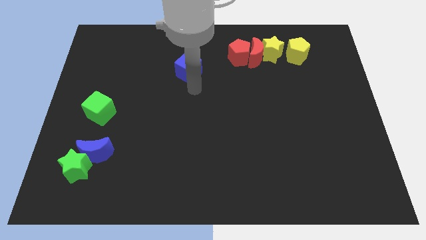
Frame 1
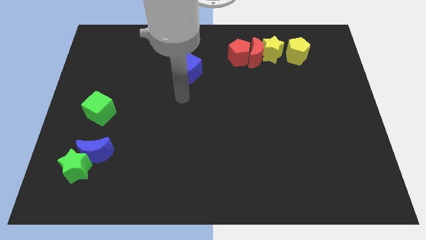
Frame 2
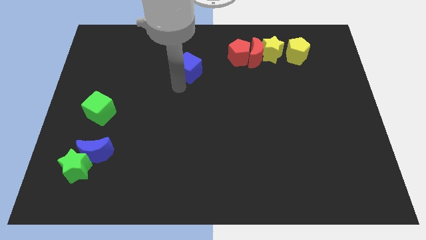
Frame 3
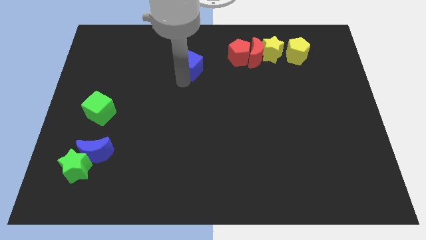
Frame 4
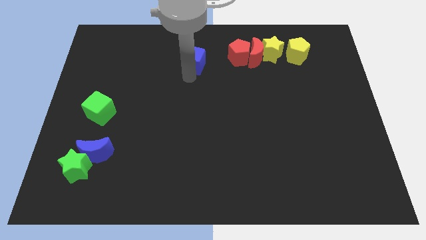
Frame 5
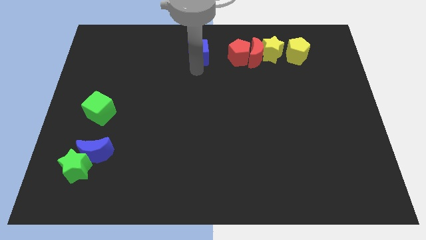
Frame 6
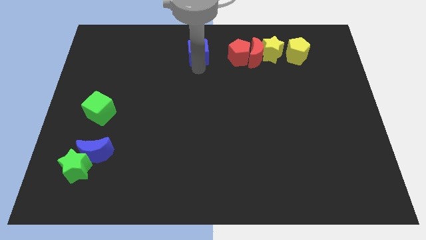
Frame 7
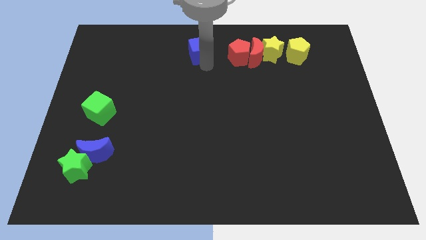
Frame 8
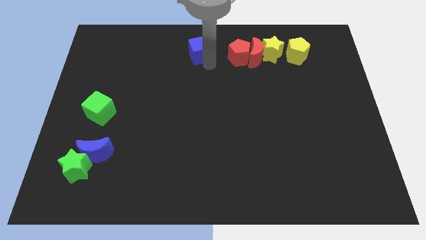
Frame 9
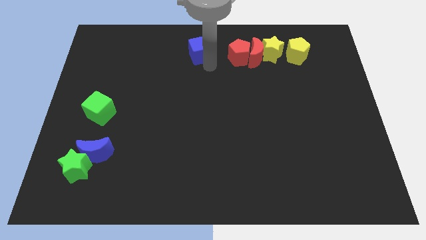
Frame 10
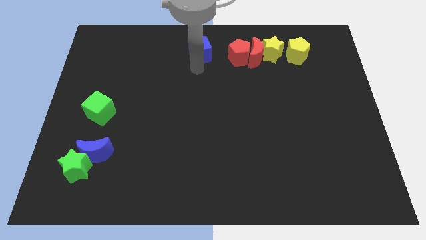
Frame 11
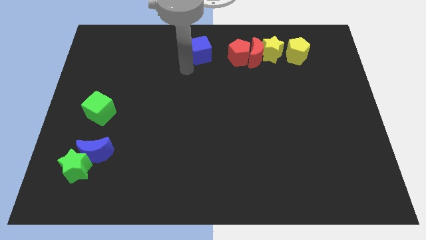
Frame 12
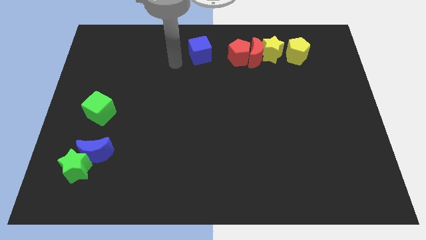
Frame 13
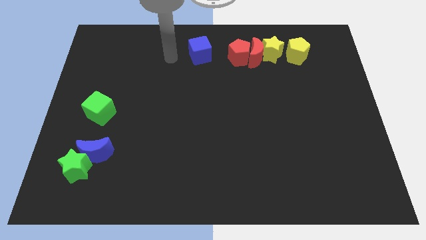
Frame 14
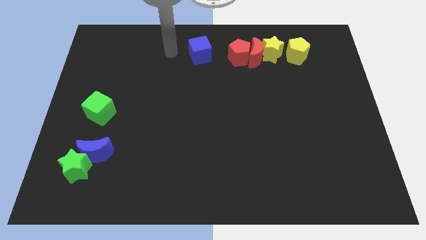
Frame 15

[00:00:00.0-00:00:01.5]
push the blue cube at the left side of the red pentagon

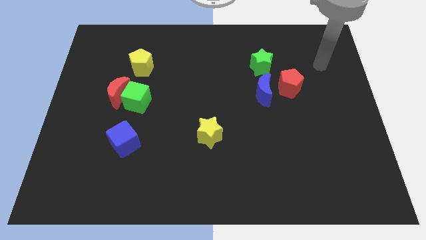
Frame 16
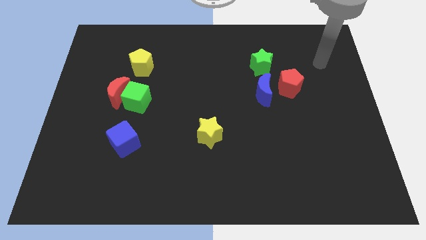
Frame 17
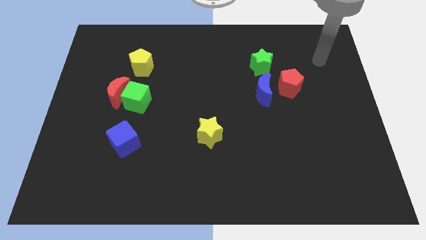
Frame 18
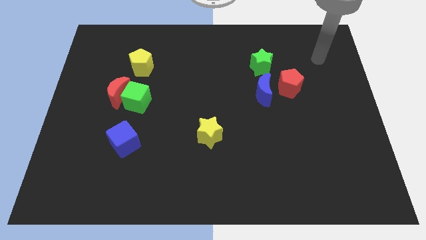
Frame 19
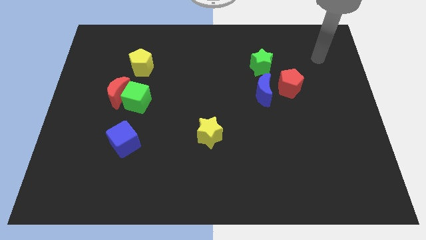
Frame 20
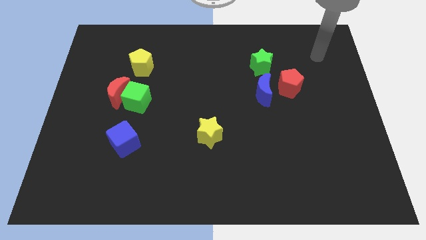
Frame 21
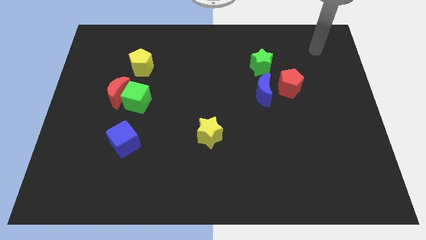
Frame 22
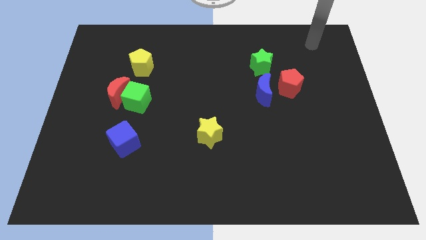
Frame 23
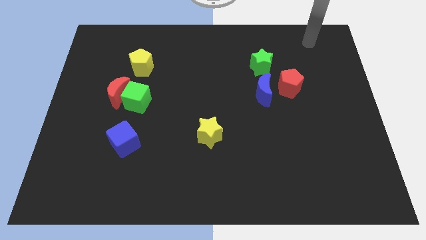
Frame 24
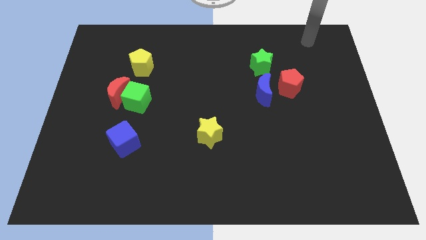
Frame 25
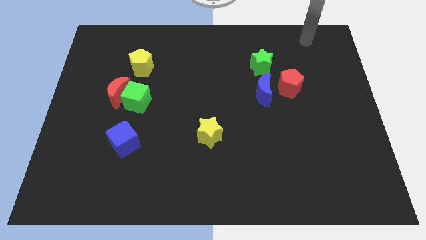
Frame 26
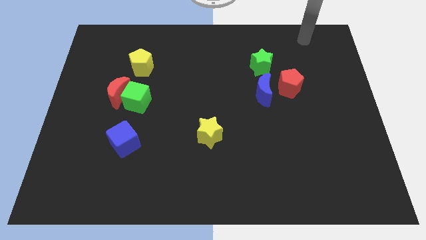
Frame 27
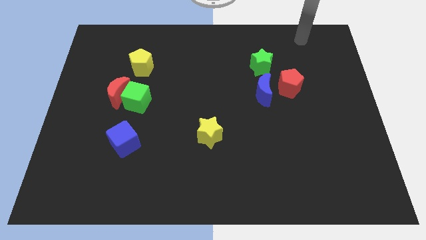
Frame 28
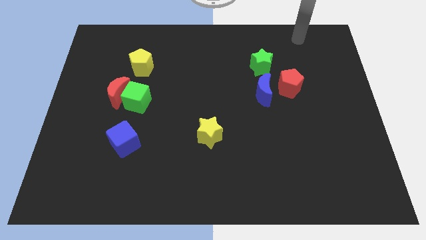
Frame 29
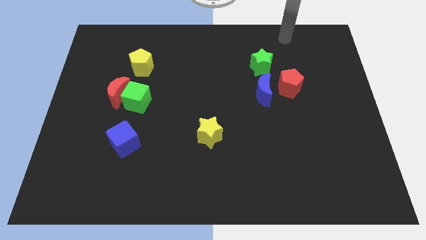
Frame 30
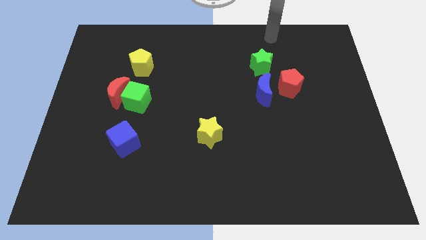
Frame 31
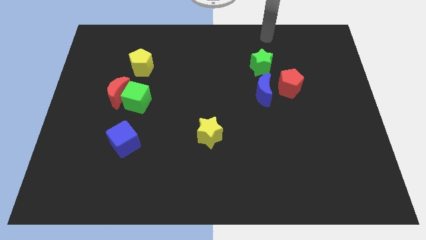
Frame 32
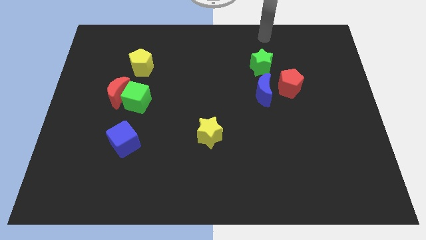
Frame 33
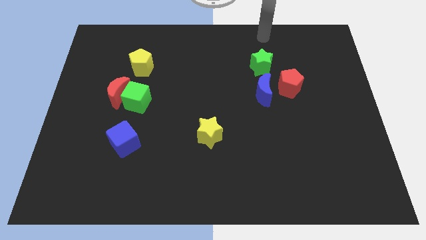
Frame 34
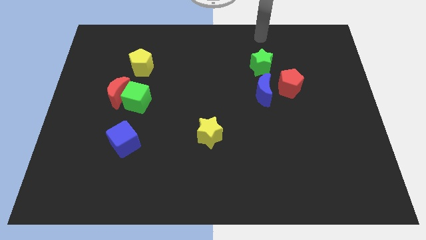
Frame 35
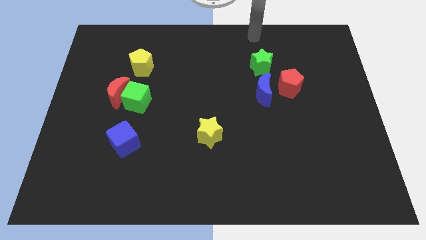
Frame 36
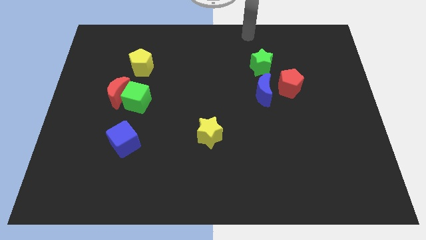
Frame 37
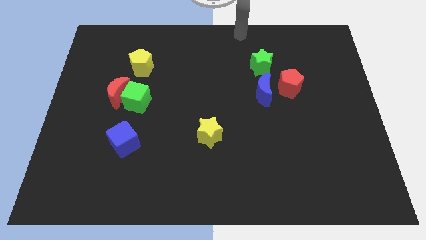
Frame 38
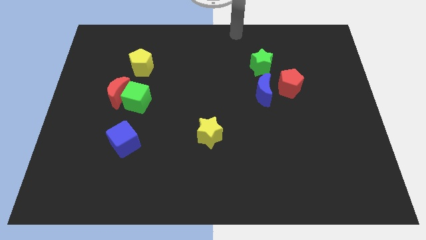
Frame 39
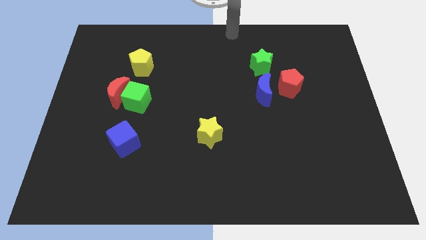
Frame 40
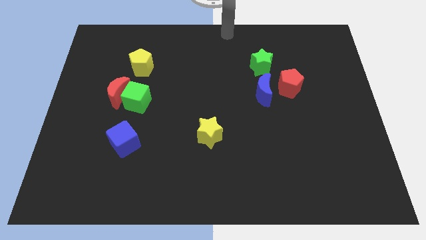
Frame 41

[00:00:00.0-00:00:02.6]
place your arm at the top of the board

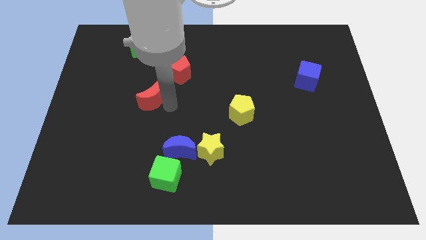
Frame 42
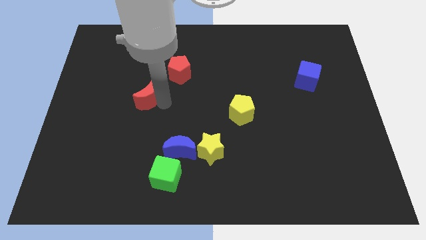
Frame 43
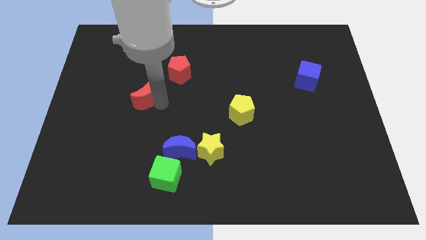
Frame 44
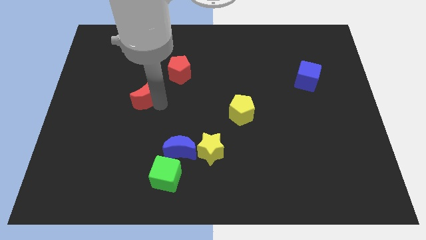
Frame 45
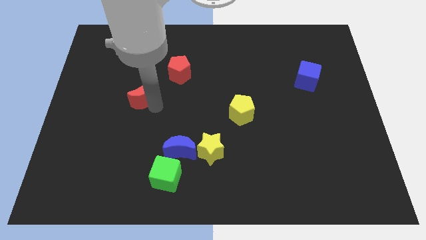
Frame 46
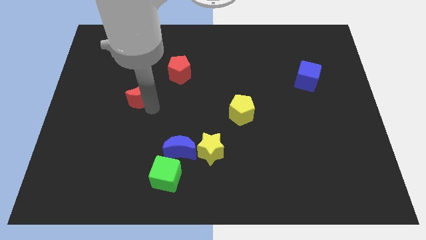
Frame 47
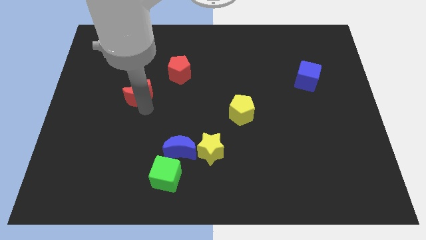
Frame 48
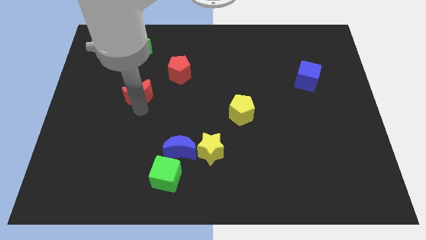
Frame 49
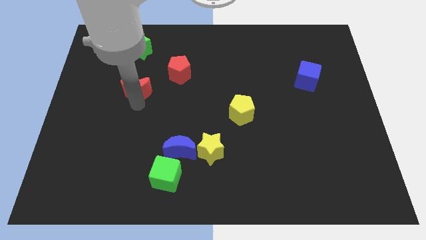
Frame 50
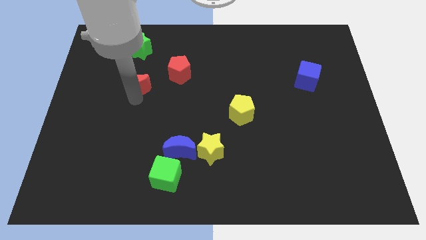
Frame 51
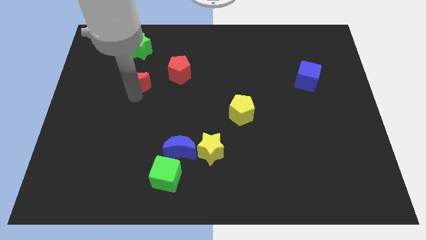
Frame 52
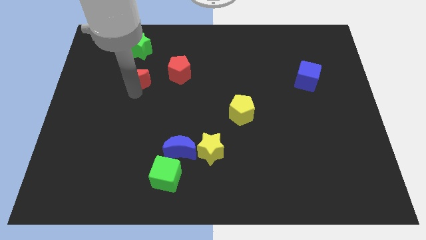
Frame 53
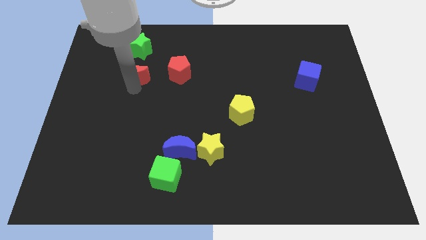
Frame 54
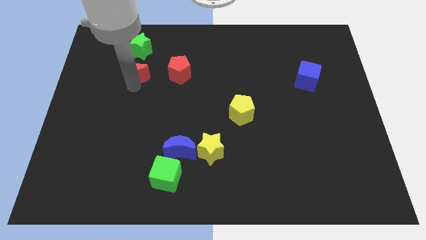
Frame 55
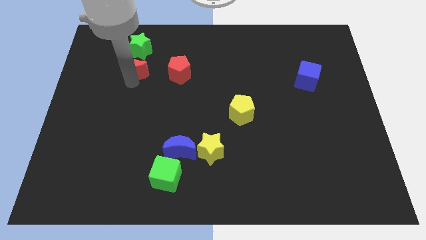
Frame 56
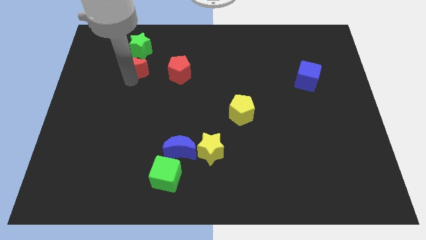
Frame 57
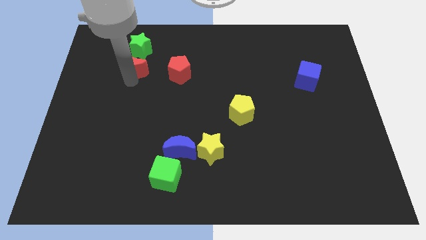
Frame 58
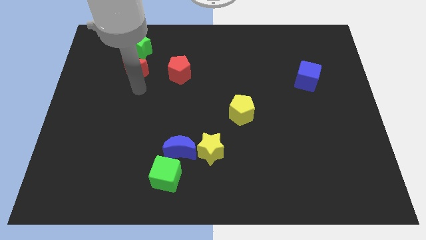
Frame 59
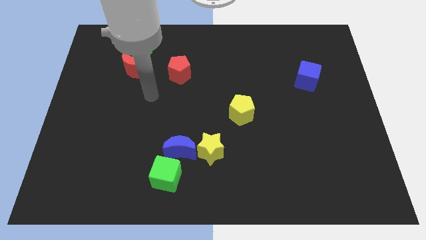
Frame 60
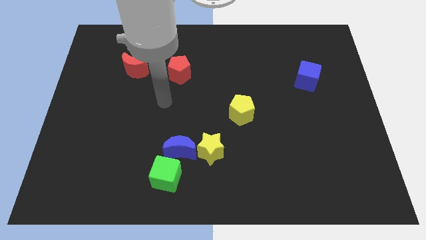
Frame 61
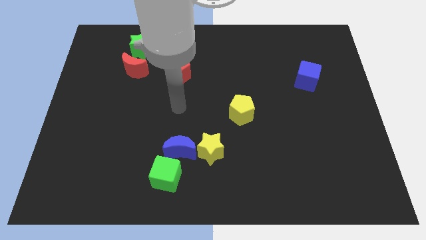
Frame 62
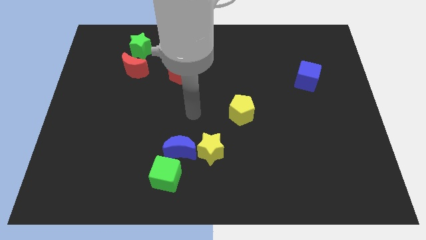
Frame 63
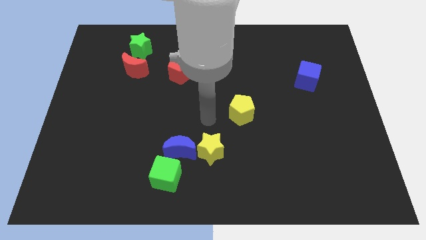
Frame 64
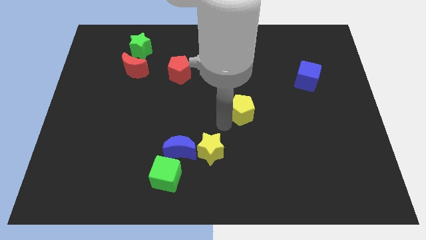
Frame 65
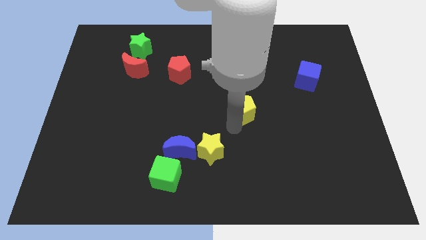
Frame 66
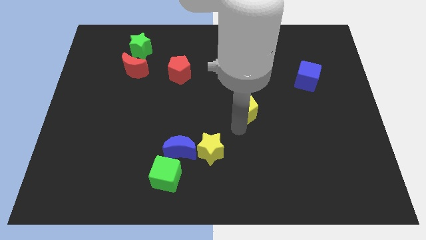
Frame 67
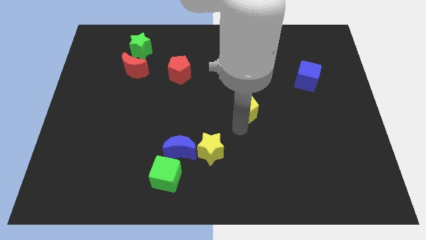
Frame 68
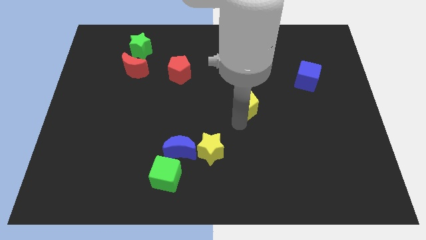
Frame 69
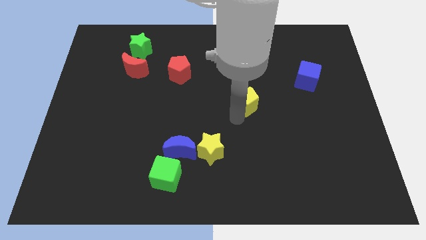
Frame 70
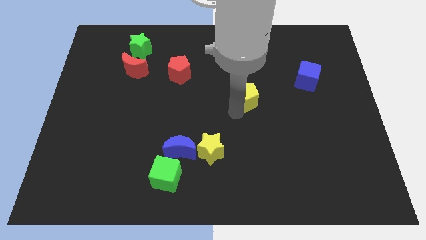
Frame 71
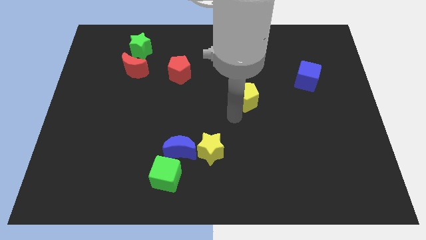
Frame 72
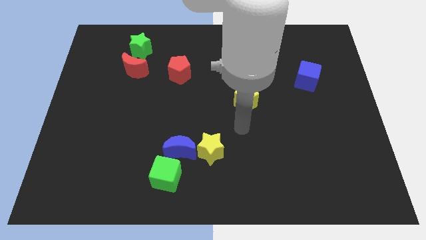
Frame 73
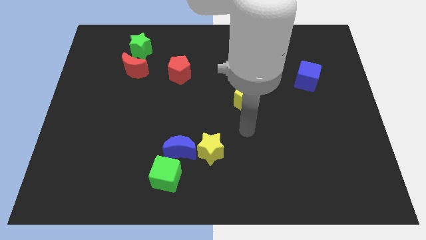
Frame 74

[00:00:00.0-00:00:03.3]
push the arm to the bottom of the yellow pentagon

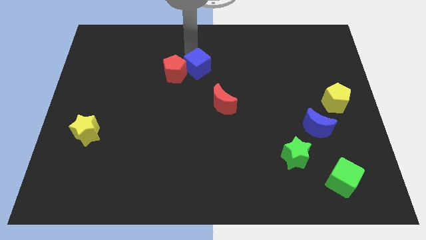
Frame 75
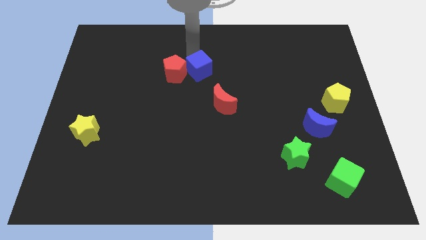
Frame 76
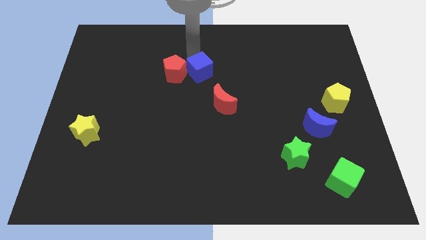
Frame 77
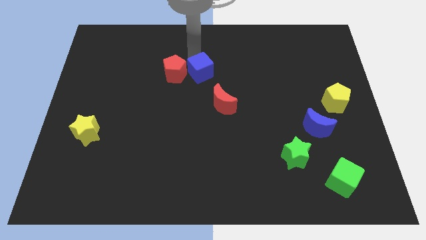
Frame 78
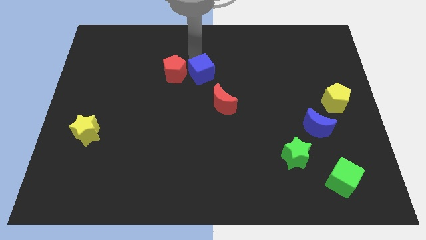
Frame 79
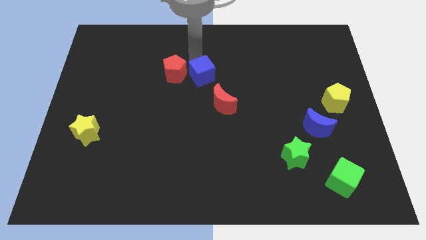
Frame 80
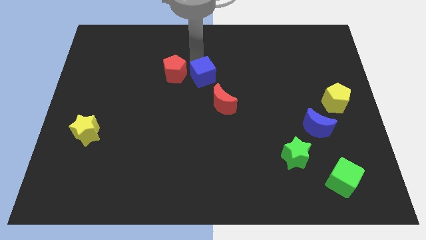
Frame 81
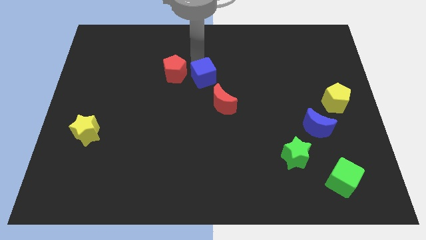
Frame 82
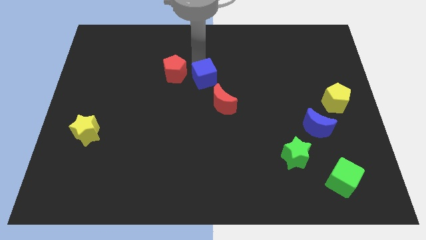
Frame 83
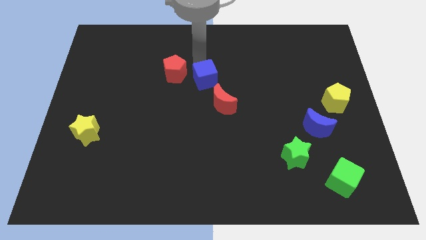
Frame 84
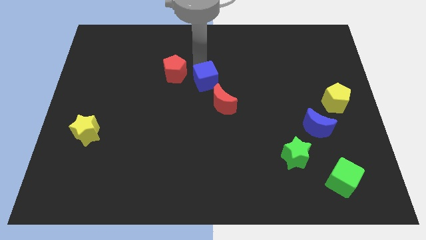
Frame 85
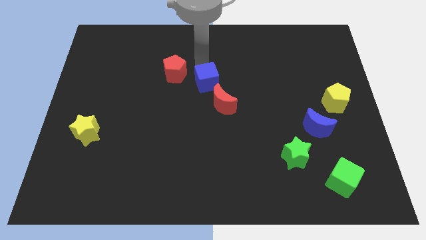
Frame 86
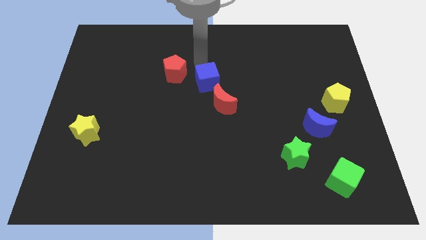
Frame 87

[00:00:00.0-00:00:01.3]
separate the blue cube from the red pentagon

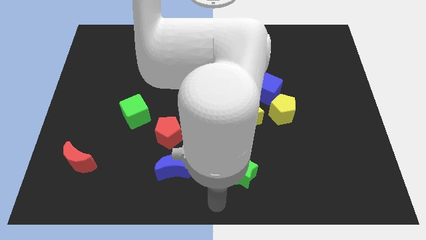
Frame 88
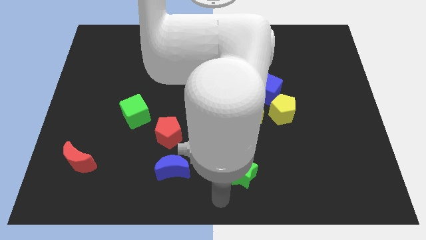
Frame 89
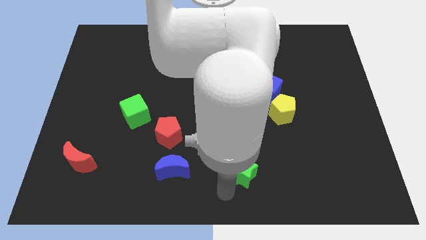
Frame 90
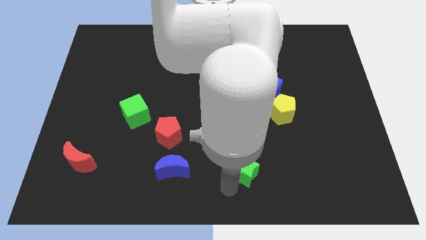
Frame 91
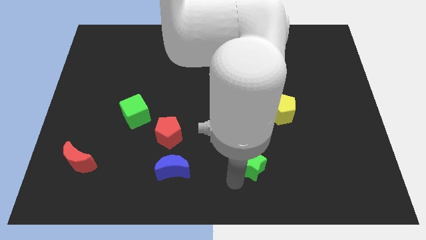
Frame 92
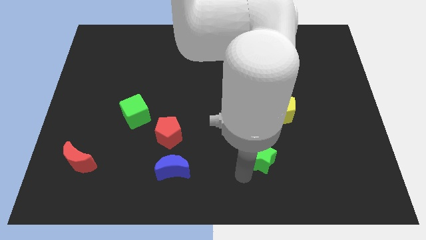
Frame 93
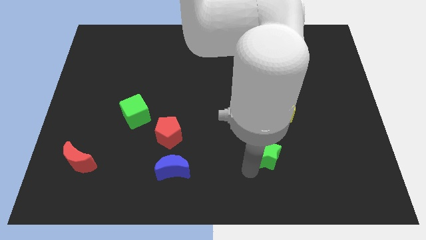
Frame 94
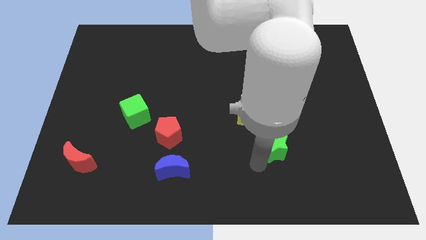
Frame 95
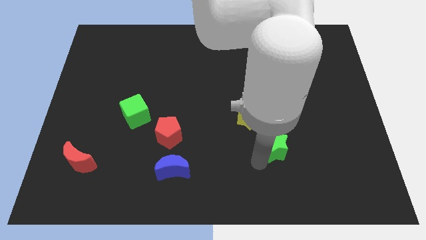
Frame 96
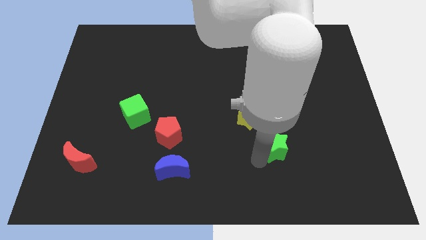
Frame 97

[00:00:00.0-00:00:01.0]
move the green star to the top of the board
